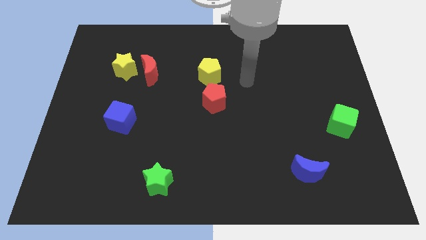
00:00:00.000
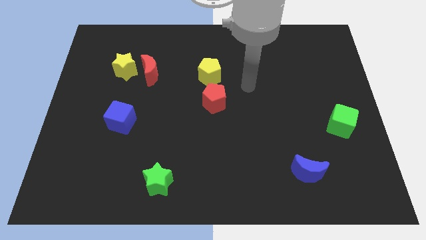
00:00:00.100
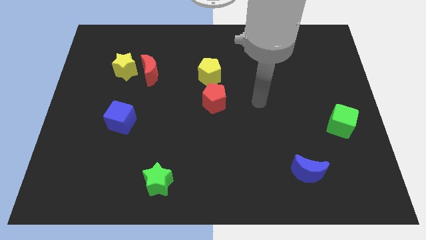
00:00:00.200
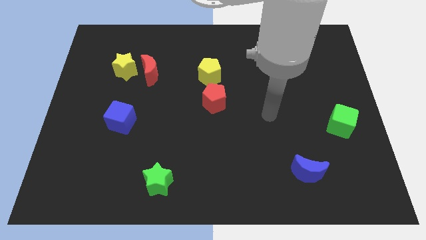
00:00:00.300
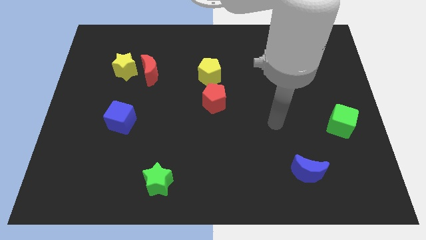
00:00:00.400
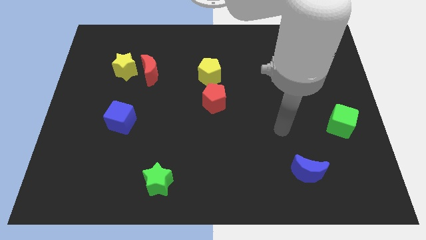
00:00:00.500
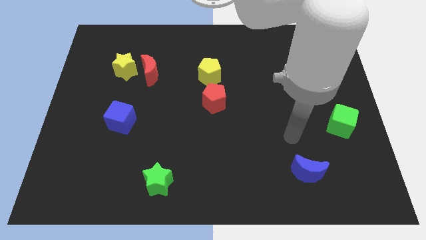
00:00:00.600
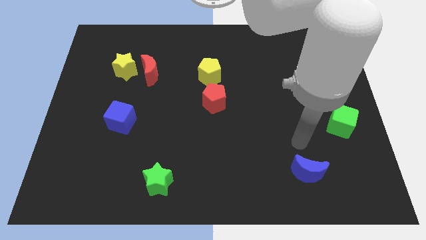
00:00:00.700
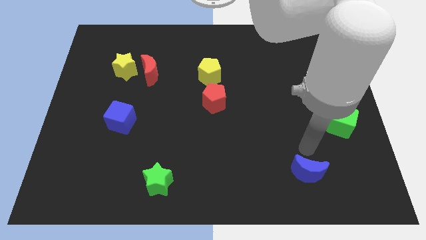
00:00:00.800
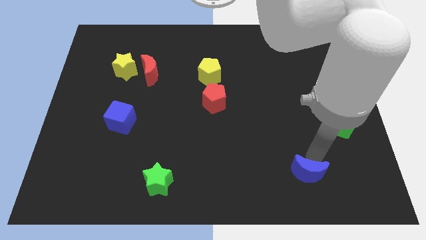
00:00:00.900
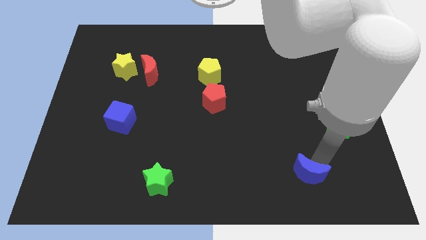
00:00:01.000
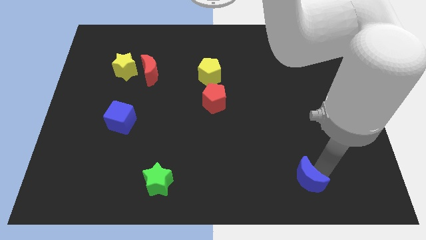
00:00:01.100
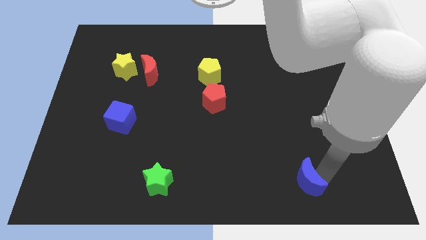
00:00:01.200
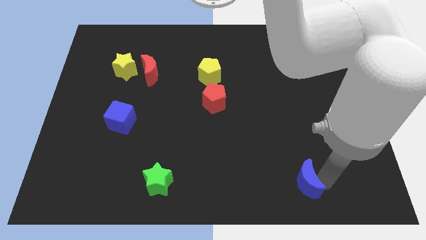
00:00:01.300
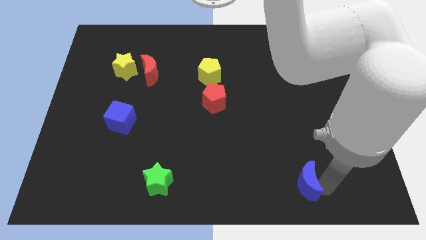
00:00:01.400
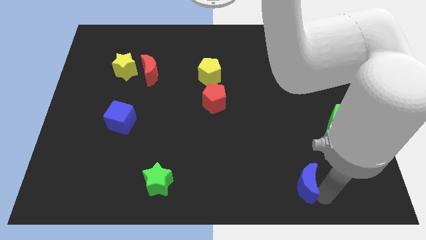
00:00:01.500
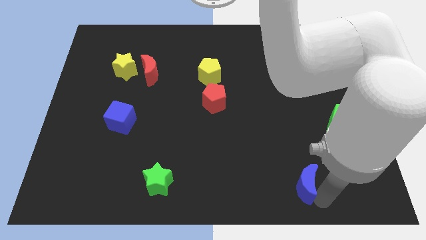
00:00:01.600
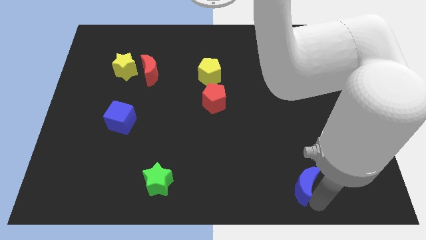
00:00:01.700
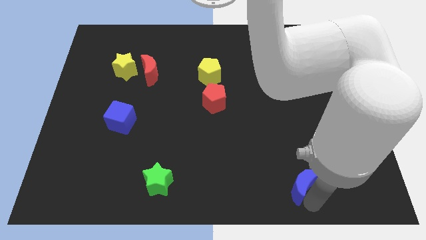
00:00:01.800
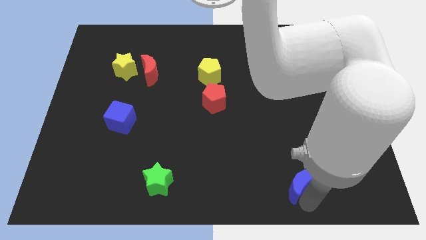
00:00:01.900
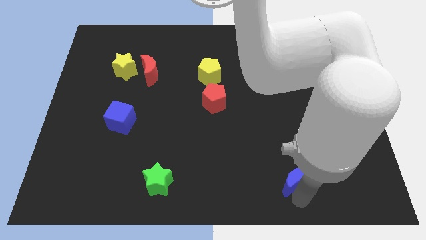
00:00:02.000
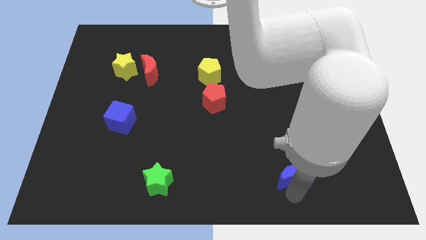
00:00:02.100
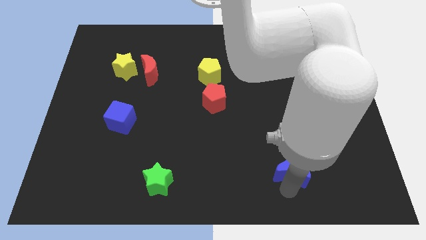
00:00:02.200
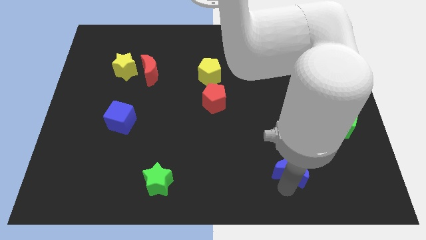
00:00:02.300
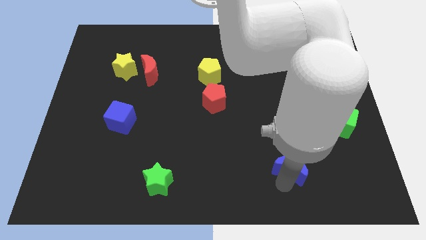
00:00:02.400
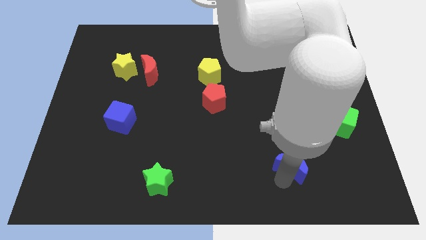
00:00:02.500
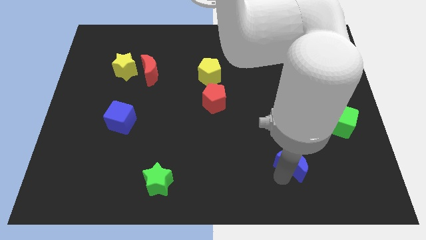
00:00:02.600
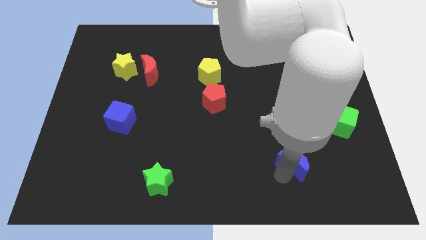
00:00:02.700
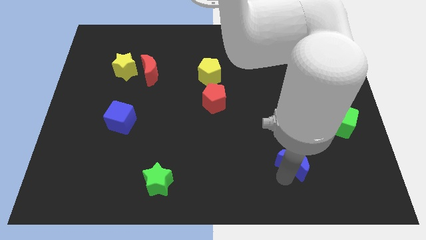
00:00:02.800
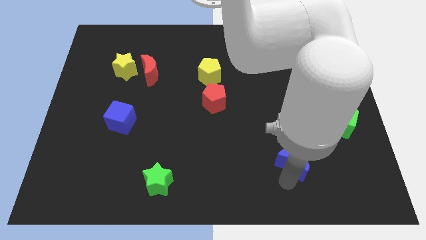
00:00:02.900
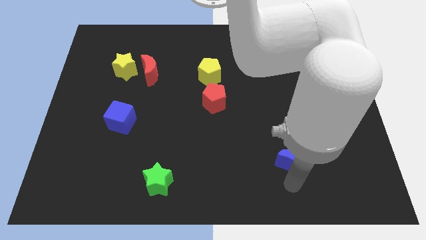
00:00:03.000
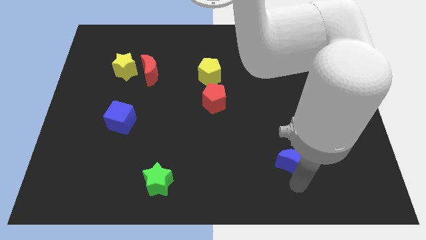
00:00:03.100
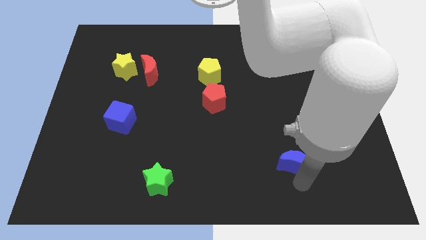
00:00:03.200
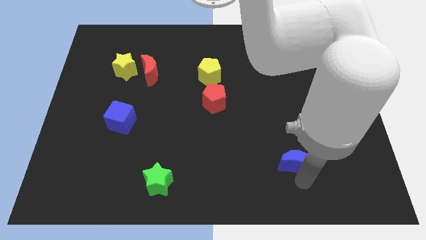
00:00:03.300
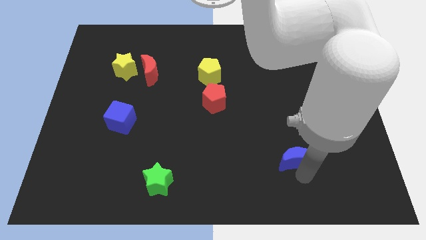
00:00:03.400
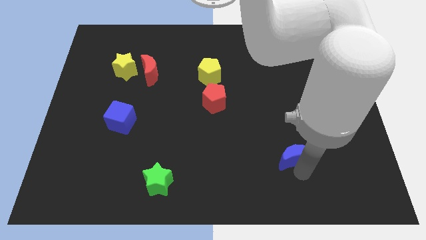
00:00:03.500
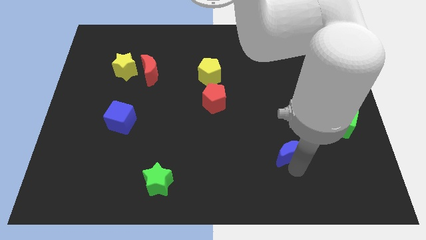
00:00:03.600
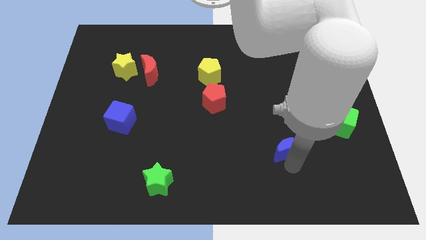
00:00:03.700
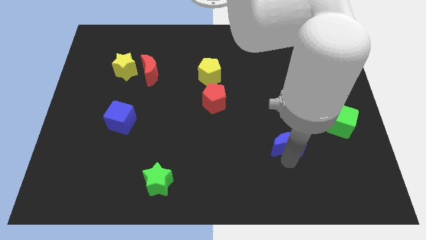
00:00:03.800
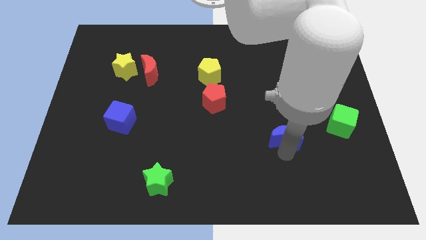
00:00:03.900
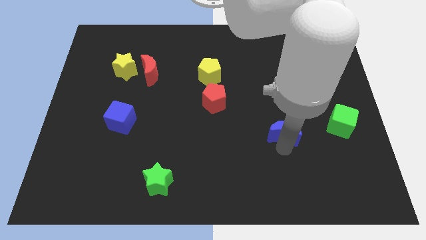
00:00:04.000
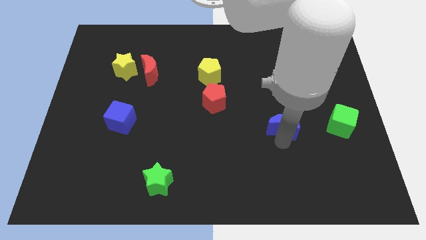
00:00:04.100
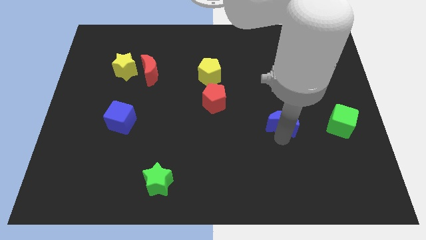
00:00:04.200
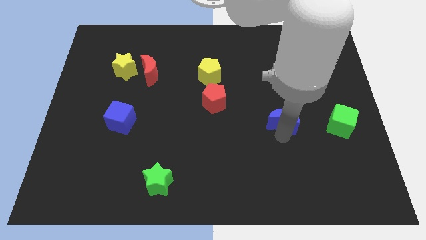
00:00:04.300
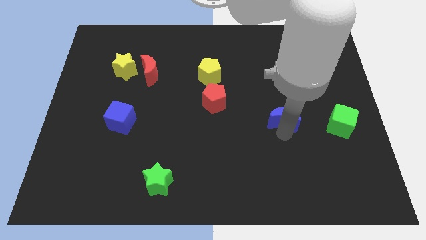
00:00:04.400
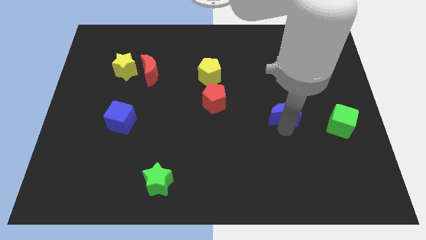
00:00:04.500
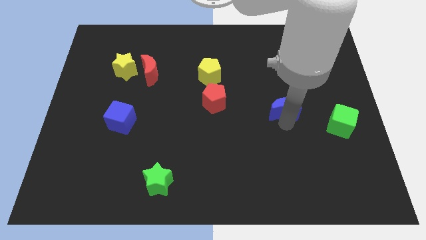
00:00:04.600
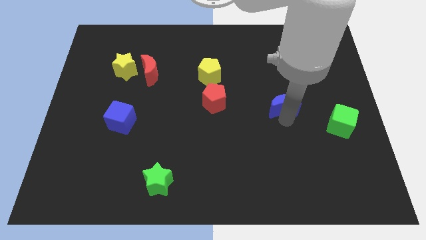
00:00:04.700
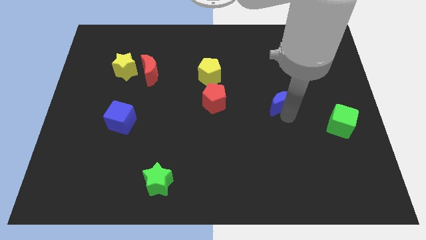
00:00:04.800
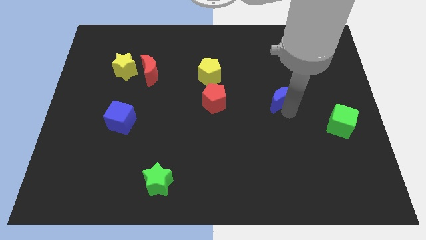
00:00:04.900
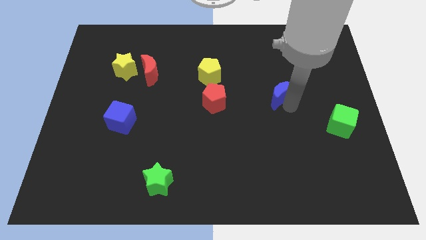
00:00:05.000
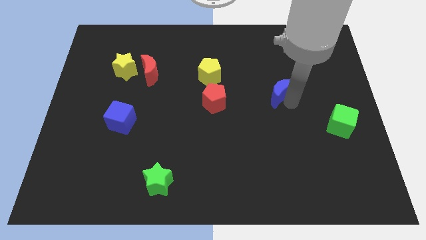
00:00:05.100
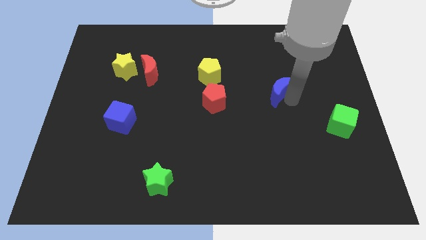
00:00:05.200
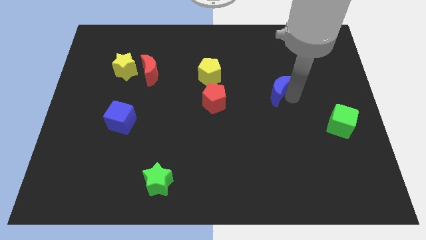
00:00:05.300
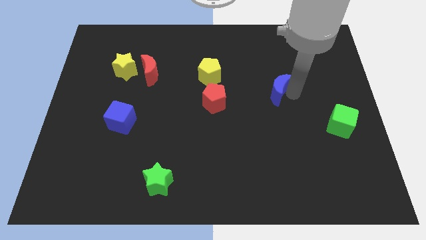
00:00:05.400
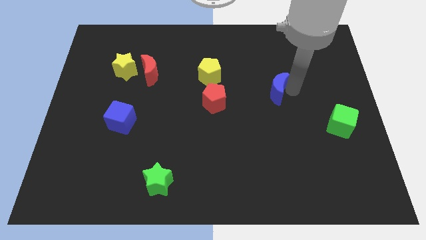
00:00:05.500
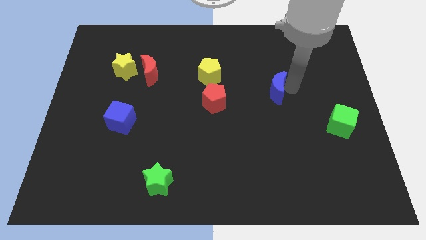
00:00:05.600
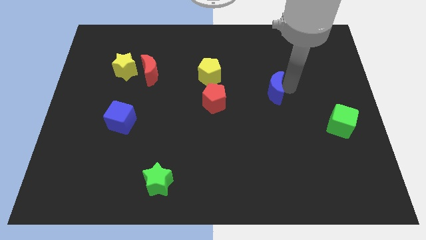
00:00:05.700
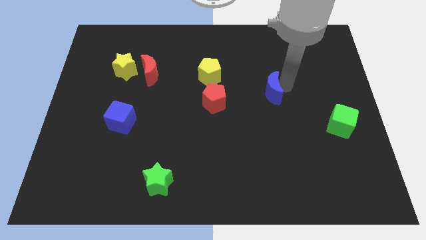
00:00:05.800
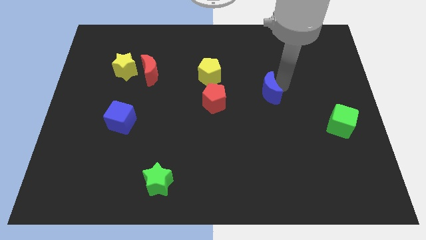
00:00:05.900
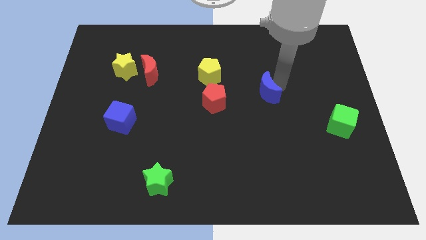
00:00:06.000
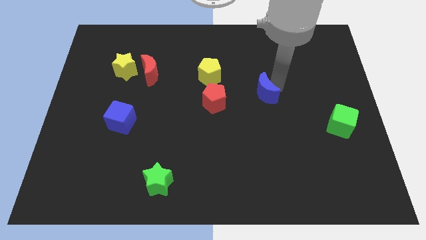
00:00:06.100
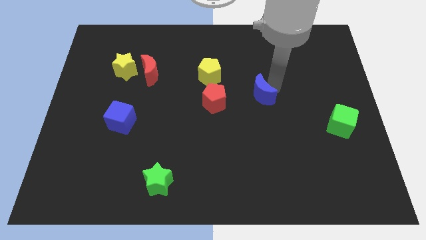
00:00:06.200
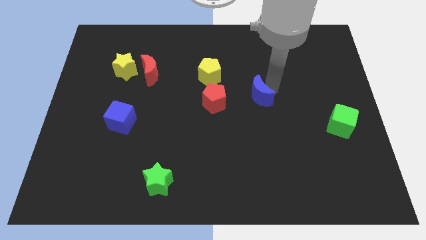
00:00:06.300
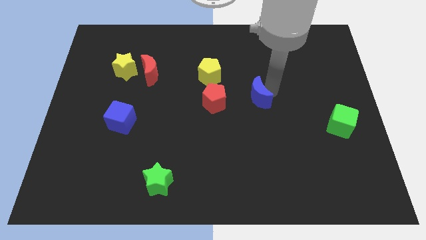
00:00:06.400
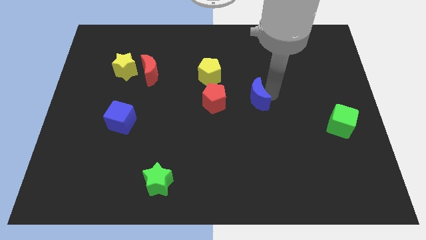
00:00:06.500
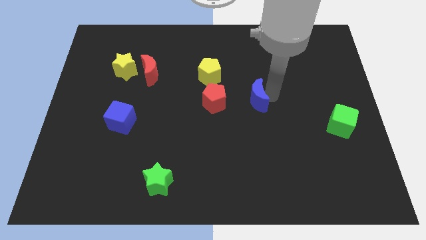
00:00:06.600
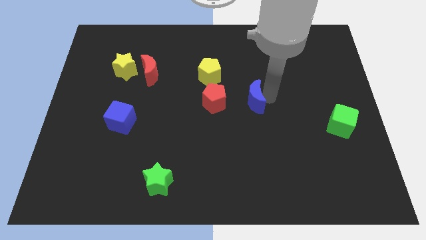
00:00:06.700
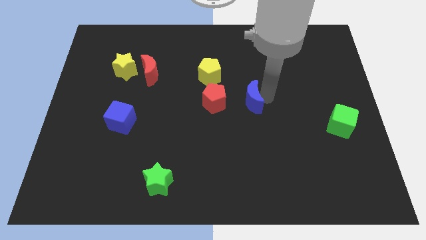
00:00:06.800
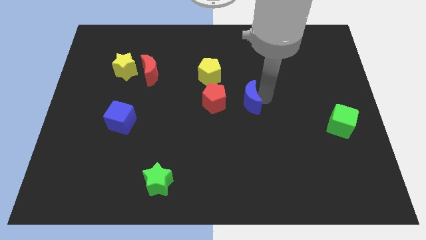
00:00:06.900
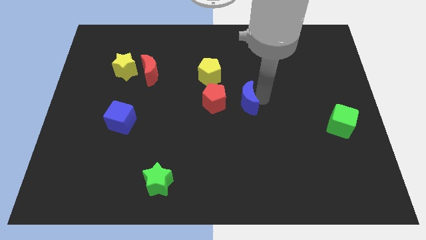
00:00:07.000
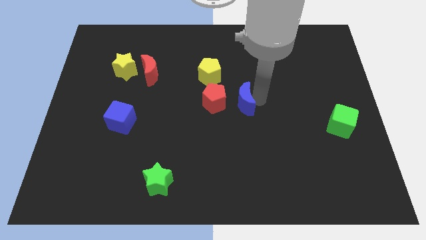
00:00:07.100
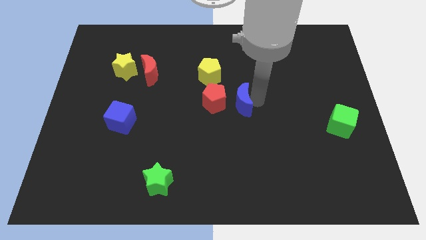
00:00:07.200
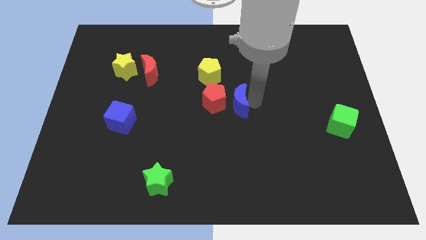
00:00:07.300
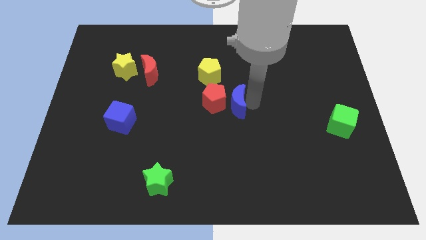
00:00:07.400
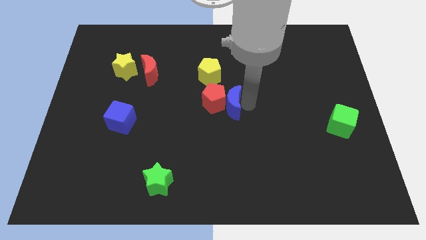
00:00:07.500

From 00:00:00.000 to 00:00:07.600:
push the blue moon next to the red pentagon

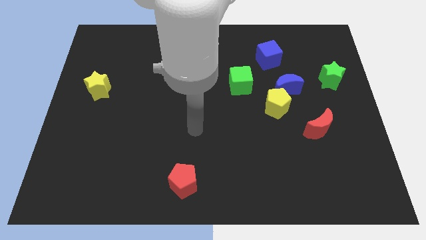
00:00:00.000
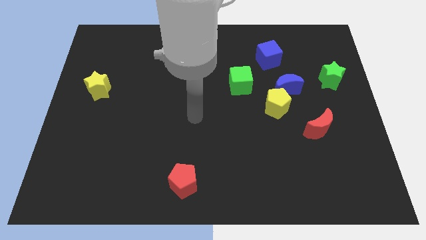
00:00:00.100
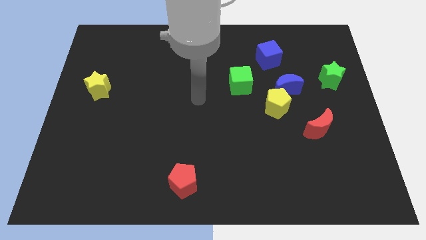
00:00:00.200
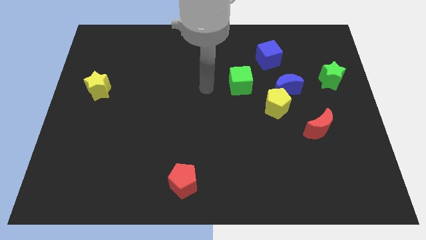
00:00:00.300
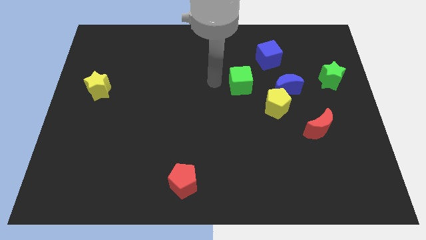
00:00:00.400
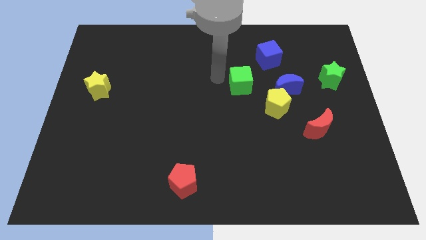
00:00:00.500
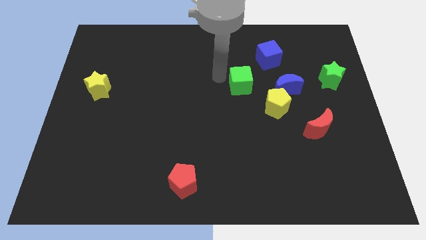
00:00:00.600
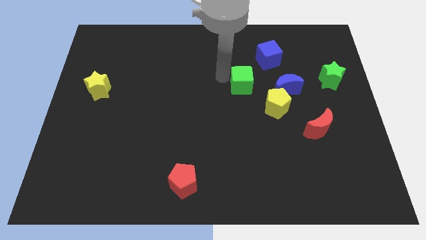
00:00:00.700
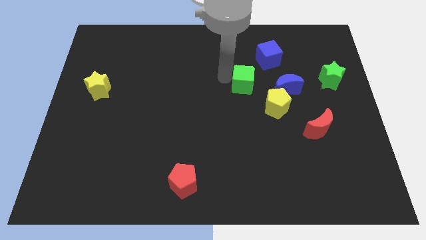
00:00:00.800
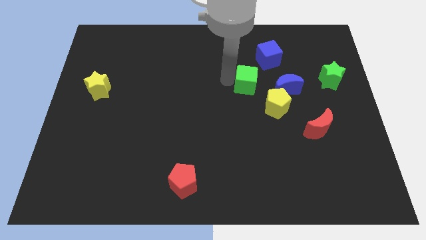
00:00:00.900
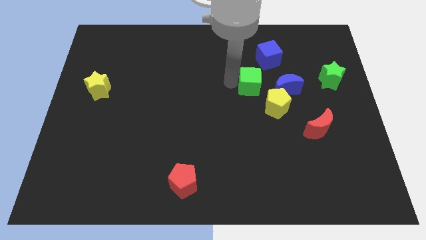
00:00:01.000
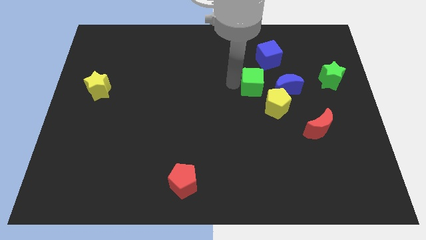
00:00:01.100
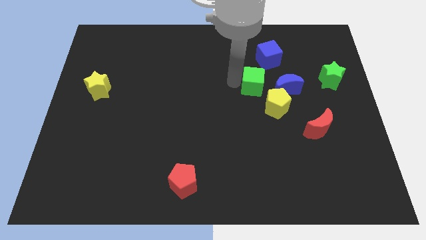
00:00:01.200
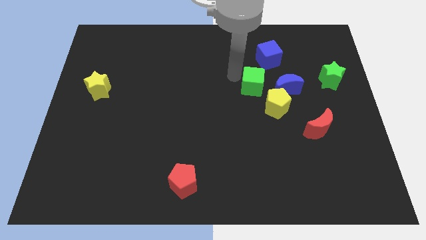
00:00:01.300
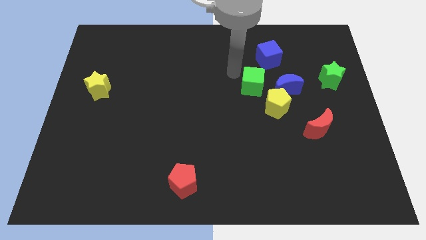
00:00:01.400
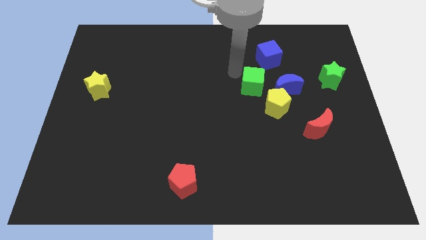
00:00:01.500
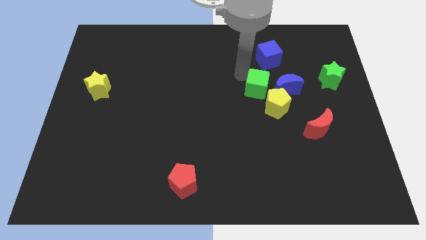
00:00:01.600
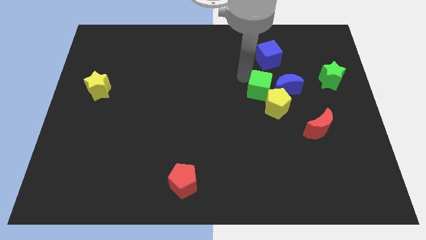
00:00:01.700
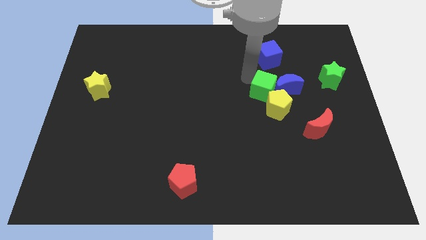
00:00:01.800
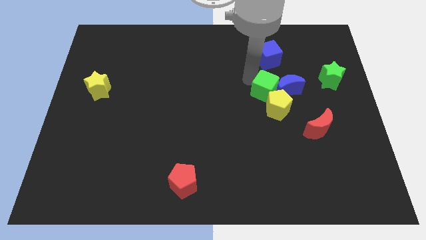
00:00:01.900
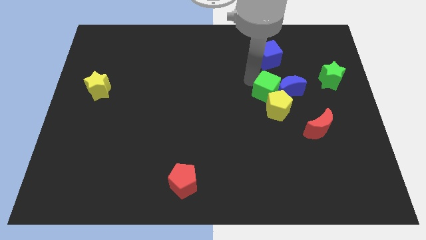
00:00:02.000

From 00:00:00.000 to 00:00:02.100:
put the green cube next to the yellow pentagon
